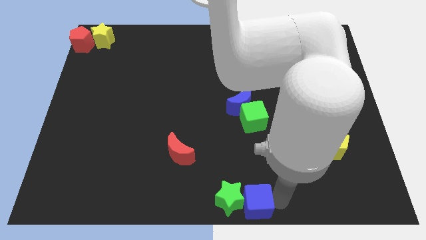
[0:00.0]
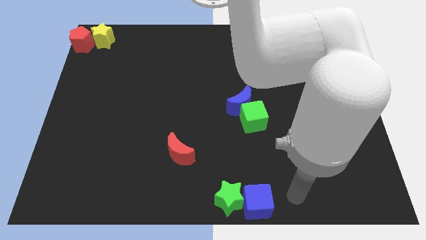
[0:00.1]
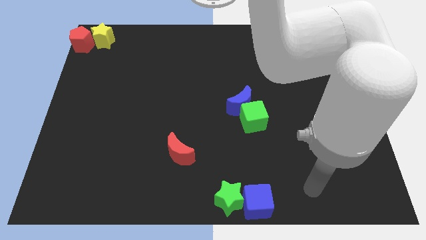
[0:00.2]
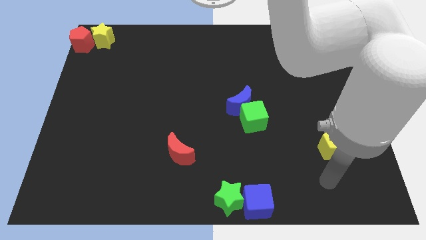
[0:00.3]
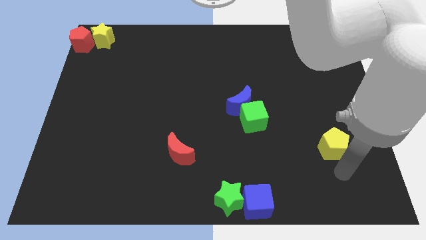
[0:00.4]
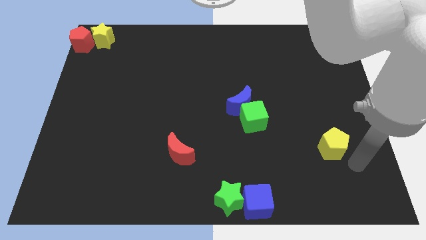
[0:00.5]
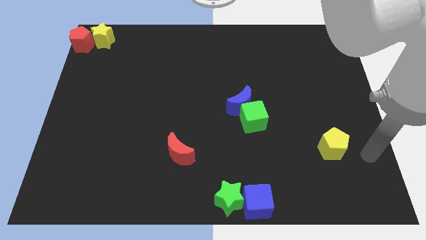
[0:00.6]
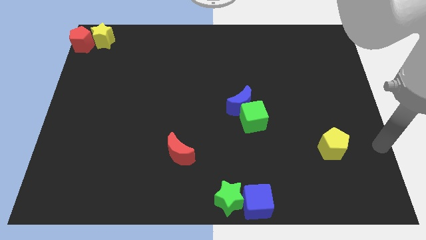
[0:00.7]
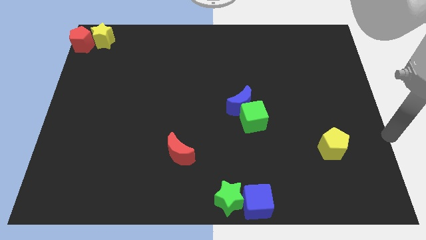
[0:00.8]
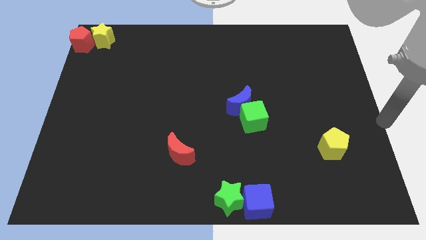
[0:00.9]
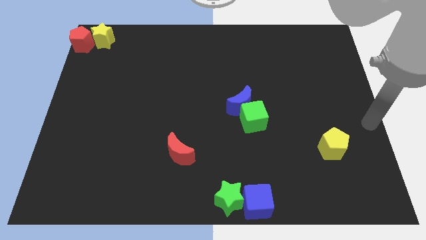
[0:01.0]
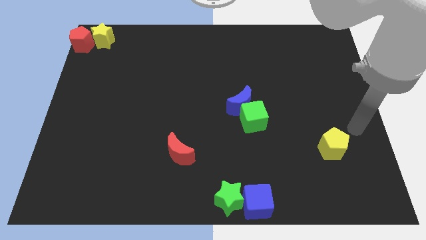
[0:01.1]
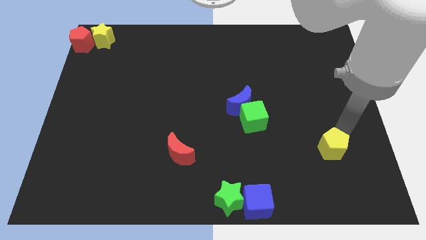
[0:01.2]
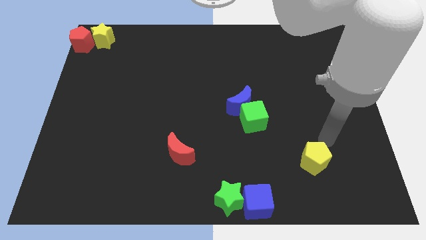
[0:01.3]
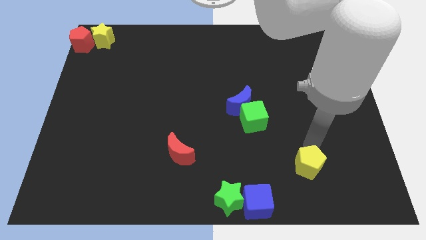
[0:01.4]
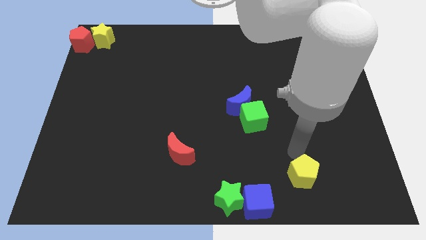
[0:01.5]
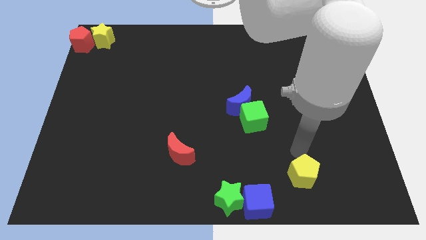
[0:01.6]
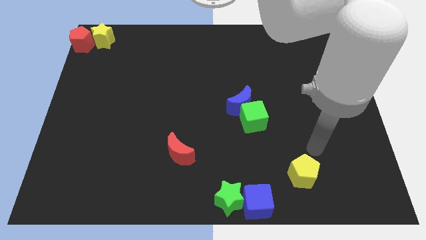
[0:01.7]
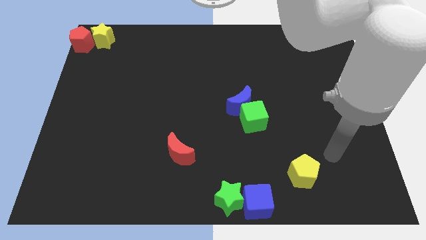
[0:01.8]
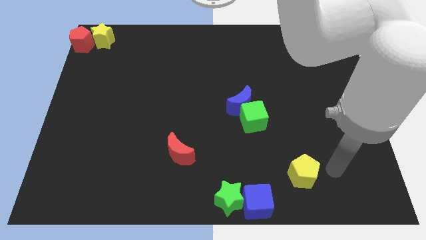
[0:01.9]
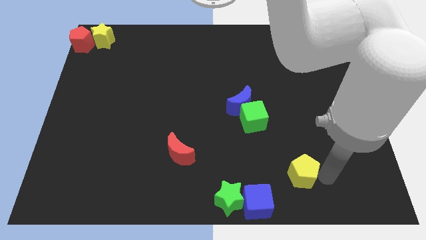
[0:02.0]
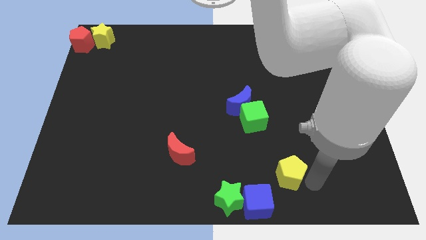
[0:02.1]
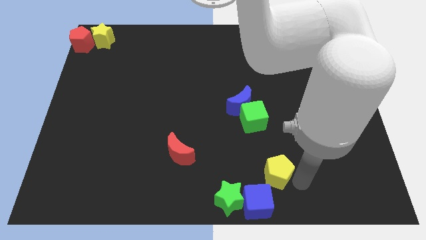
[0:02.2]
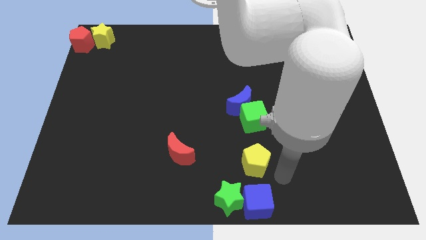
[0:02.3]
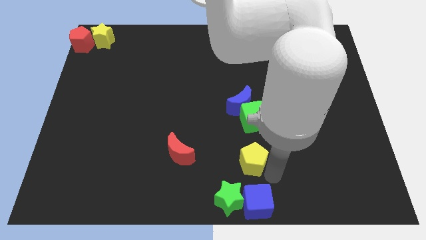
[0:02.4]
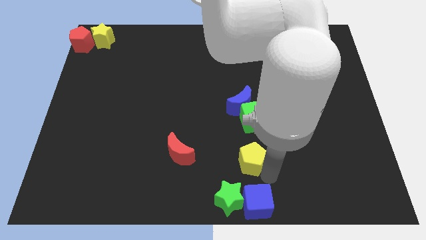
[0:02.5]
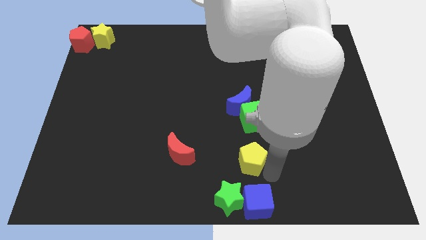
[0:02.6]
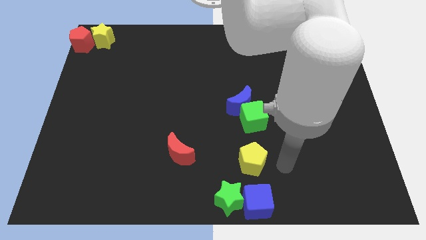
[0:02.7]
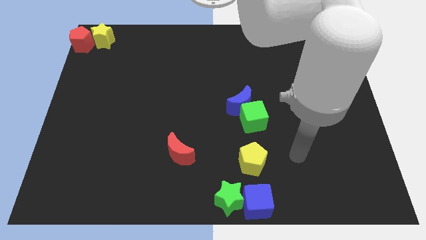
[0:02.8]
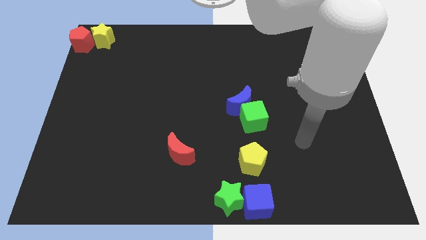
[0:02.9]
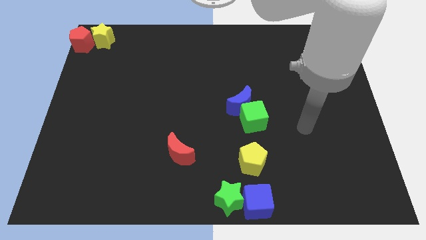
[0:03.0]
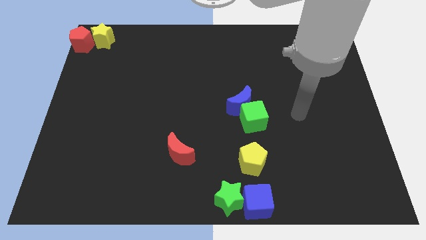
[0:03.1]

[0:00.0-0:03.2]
place the yellow pentagon above the blue cube

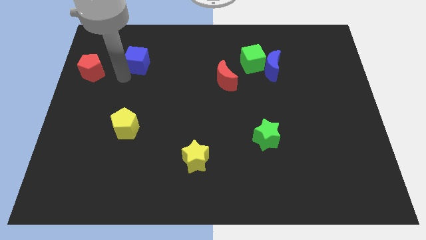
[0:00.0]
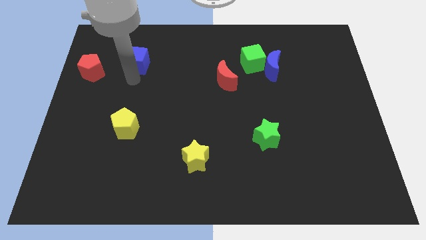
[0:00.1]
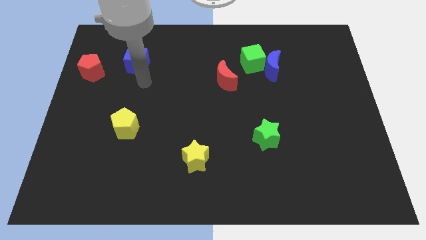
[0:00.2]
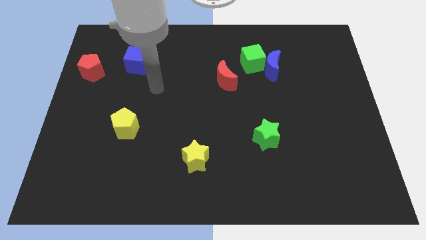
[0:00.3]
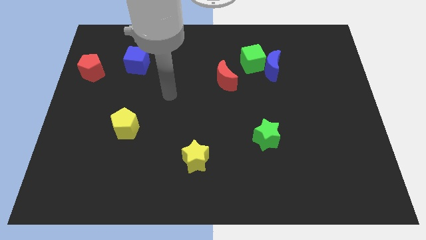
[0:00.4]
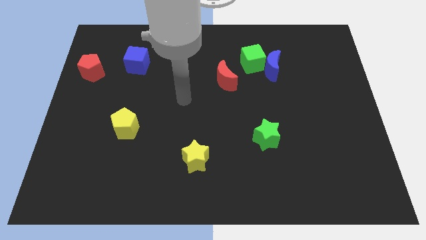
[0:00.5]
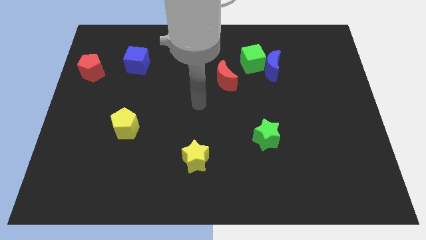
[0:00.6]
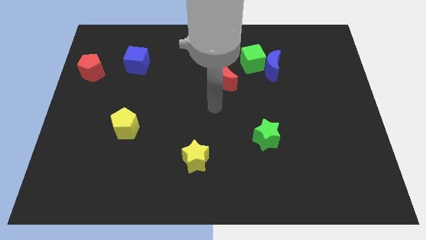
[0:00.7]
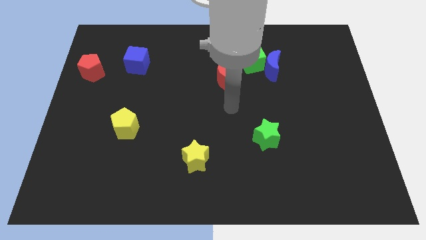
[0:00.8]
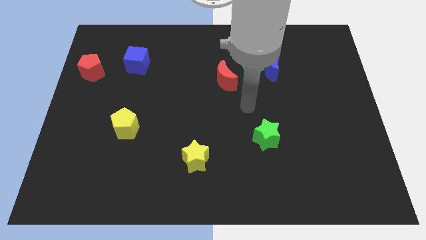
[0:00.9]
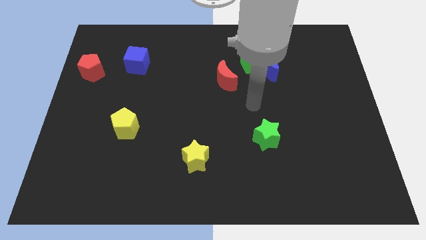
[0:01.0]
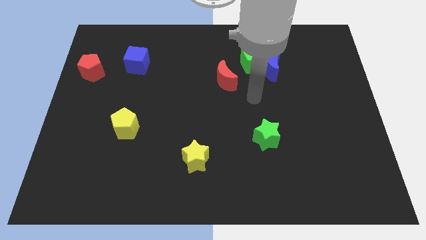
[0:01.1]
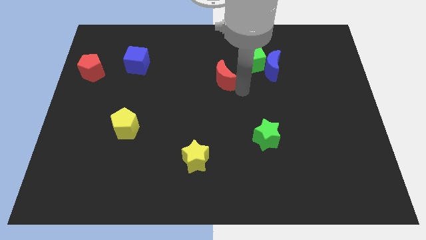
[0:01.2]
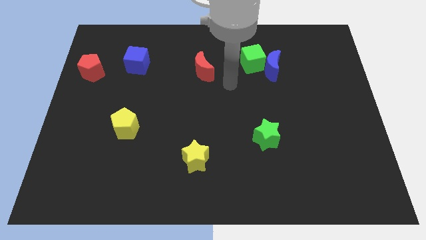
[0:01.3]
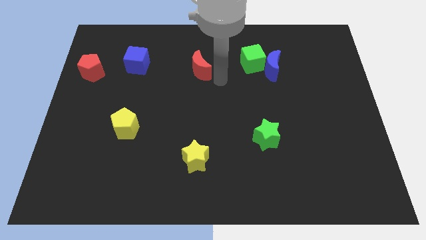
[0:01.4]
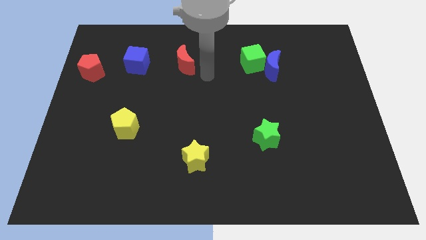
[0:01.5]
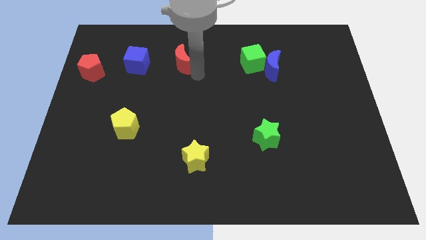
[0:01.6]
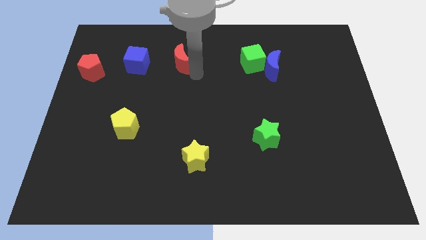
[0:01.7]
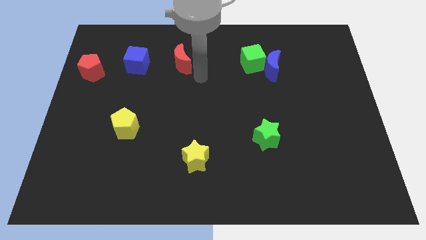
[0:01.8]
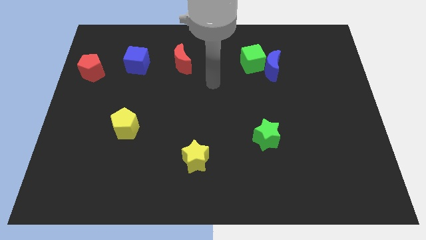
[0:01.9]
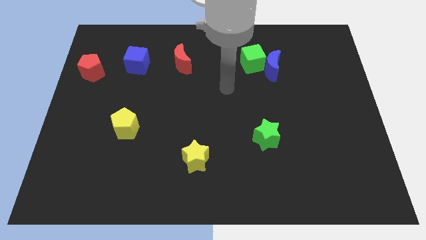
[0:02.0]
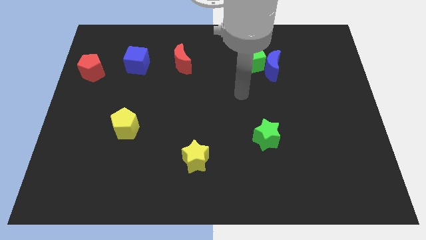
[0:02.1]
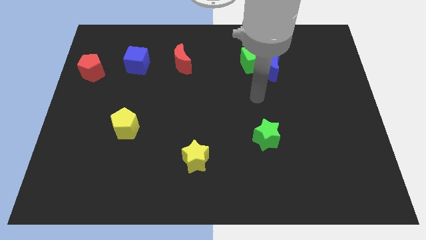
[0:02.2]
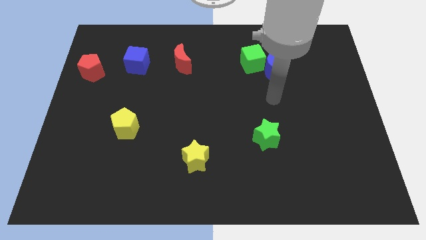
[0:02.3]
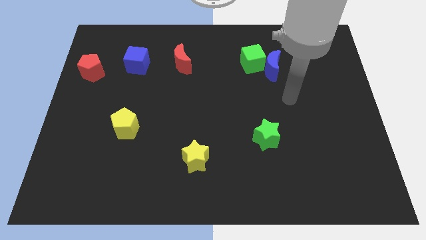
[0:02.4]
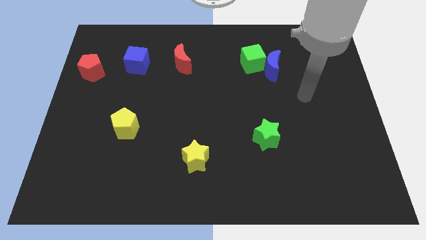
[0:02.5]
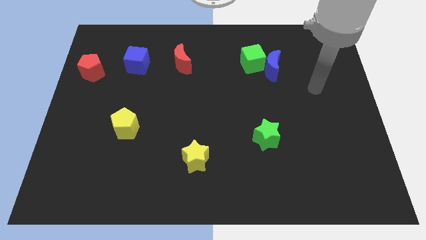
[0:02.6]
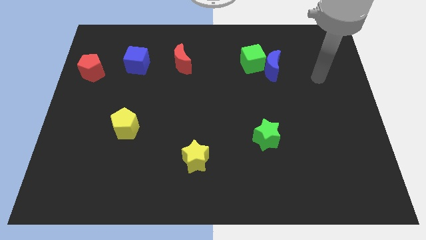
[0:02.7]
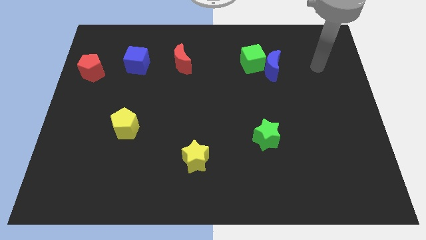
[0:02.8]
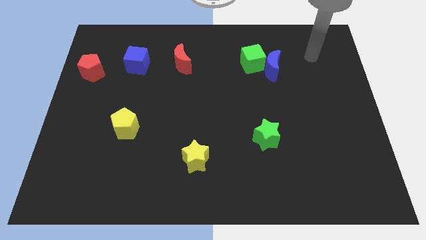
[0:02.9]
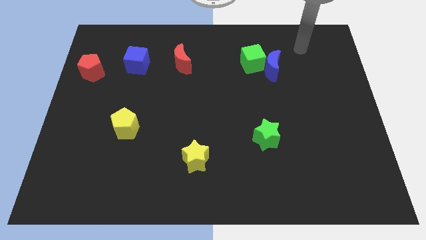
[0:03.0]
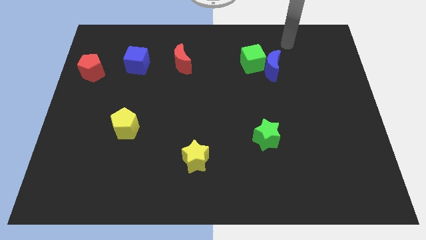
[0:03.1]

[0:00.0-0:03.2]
slide the red moon horizontally on the right side of the blue cube

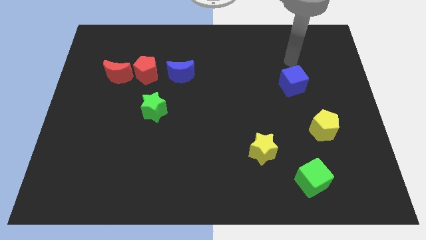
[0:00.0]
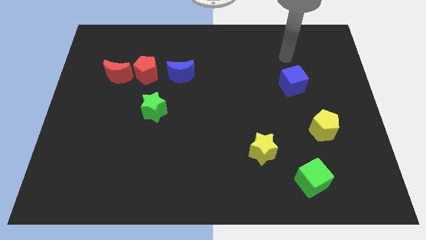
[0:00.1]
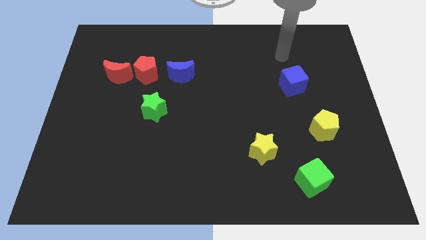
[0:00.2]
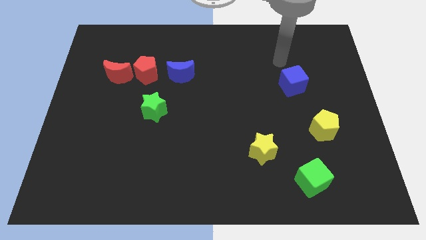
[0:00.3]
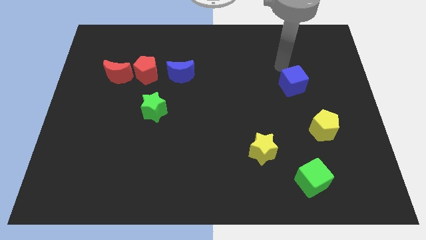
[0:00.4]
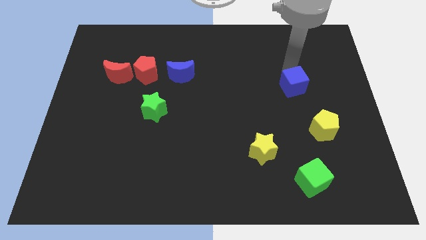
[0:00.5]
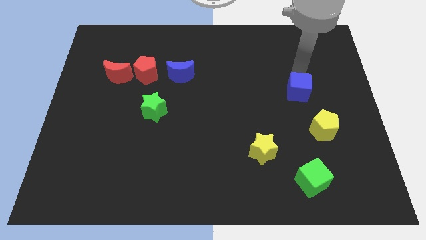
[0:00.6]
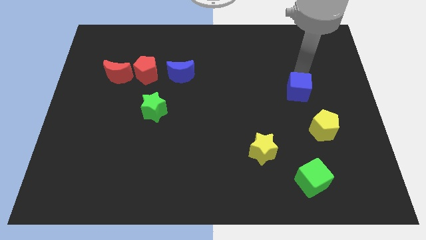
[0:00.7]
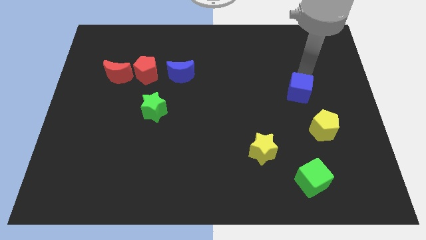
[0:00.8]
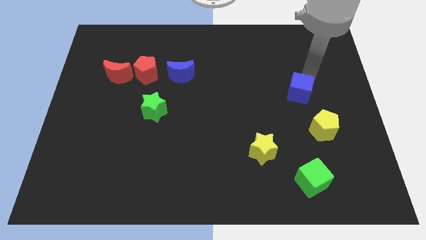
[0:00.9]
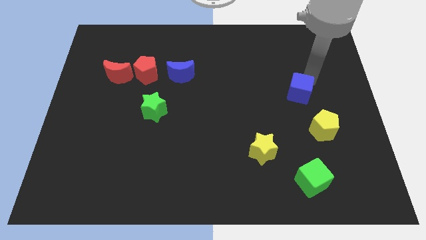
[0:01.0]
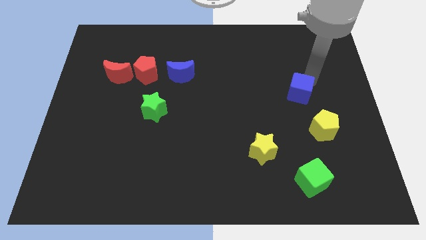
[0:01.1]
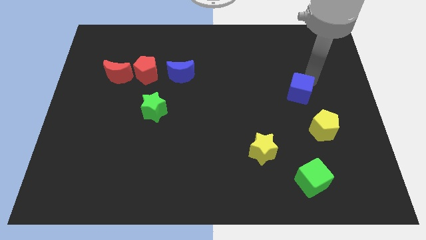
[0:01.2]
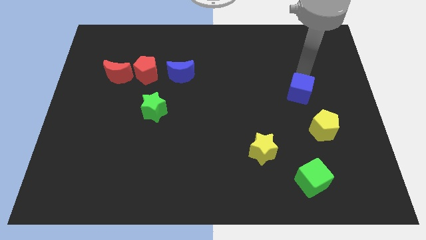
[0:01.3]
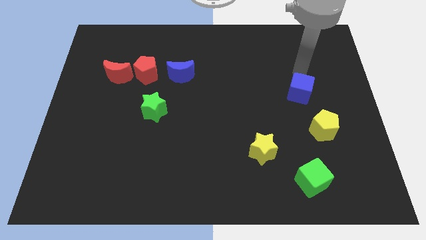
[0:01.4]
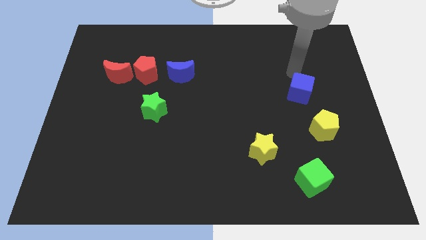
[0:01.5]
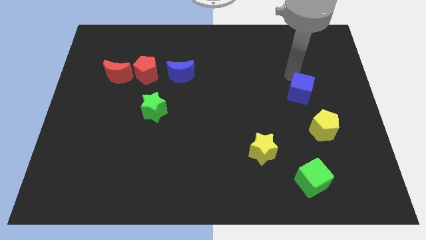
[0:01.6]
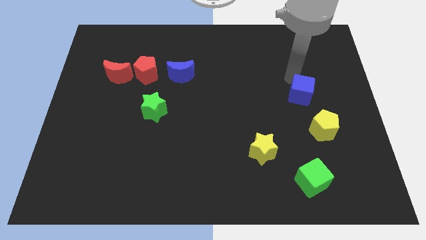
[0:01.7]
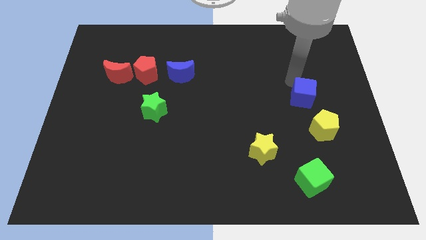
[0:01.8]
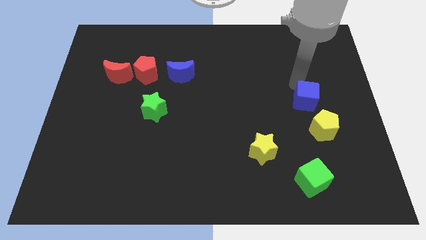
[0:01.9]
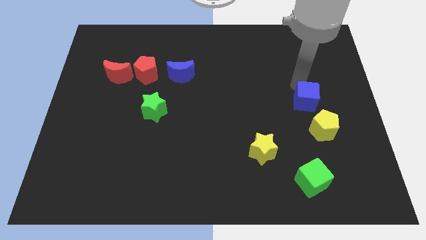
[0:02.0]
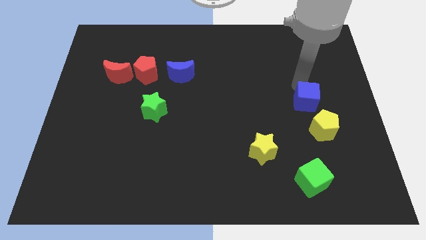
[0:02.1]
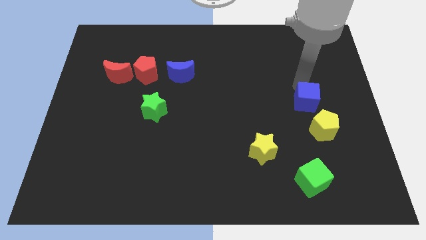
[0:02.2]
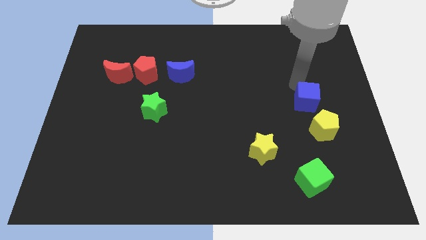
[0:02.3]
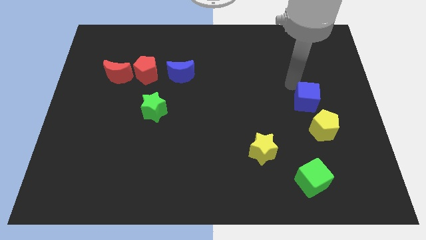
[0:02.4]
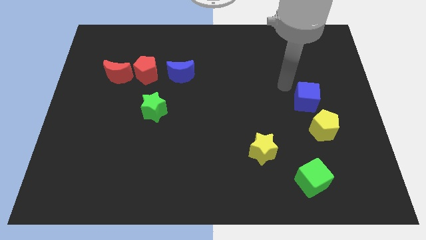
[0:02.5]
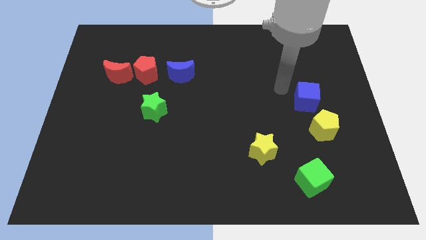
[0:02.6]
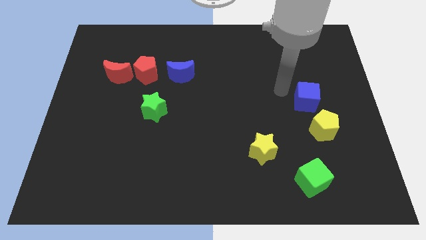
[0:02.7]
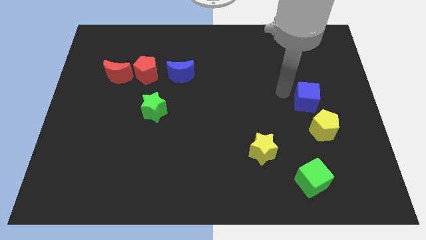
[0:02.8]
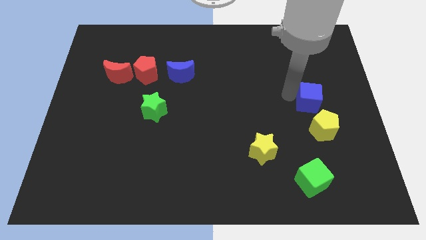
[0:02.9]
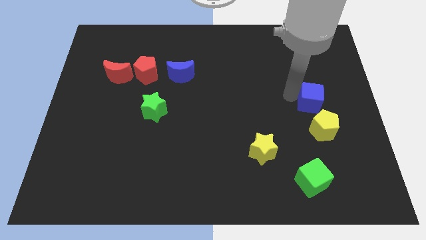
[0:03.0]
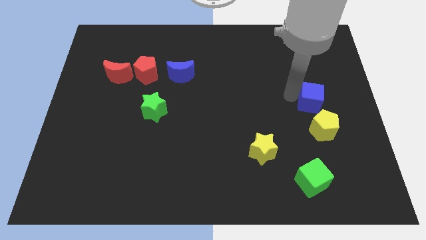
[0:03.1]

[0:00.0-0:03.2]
push the blue cube near to the yellow pentagon
